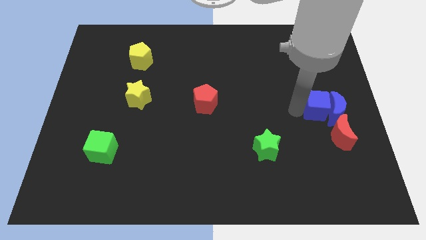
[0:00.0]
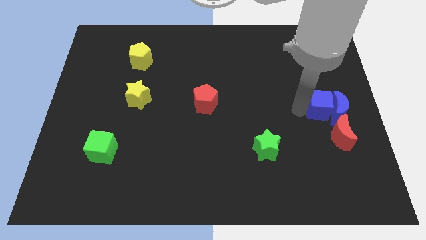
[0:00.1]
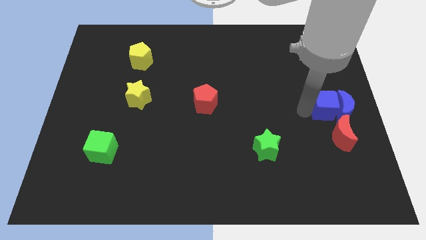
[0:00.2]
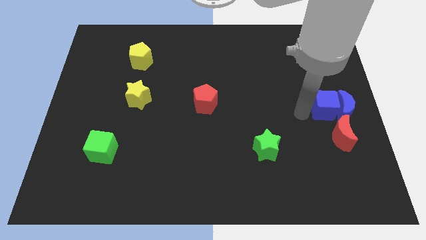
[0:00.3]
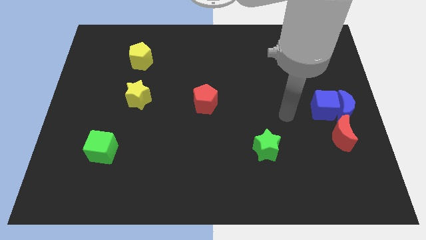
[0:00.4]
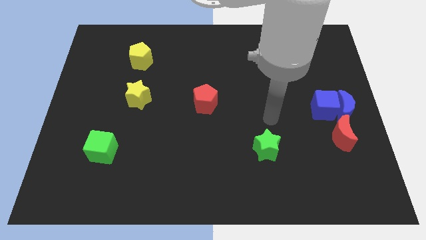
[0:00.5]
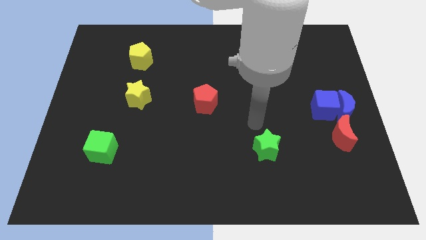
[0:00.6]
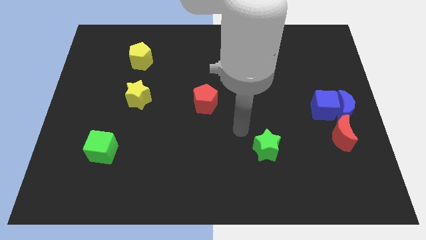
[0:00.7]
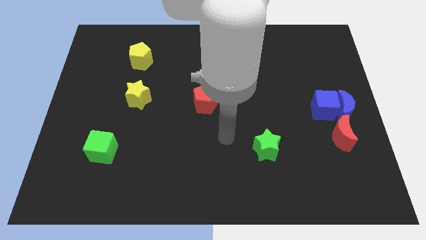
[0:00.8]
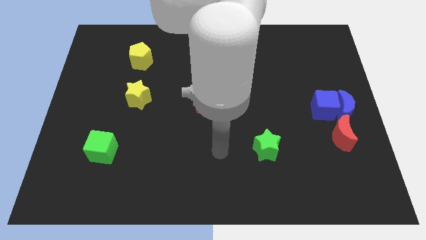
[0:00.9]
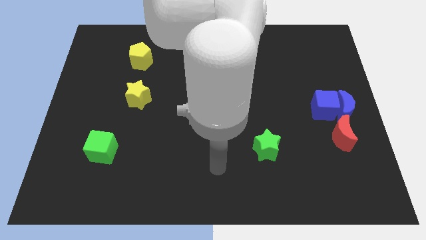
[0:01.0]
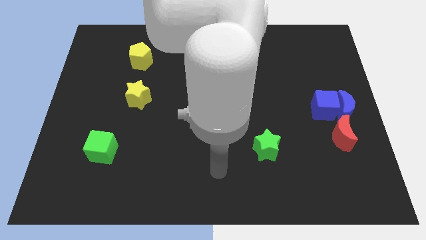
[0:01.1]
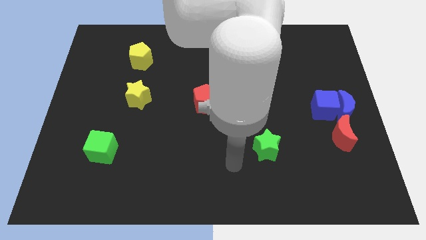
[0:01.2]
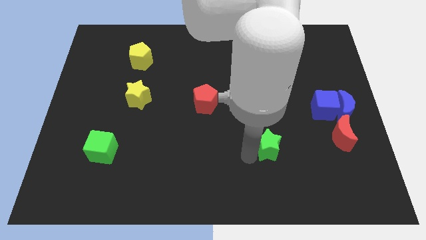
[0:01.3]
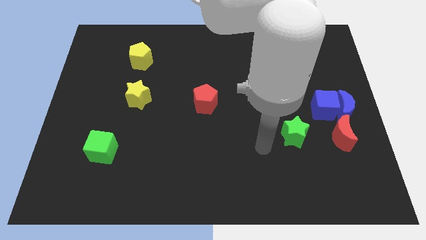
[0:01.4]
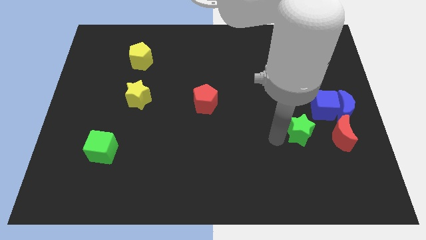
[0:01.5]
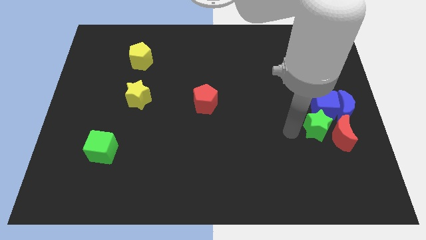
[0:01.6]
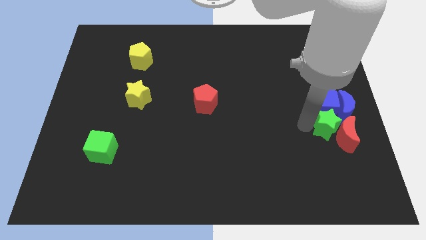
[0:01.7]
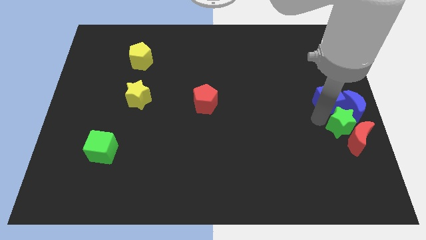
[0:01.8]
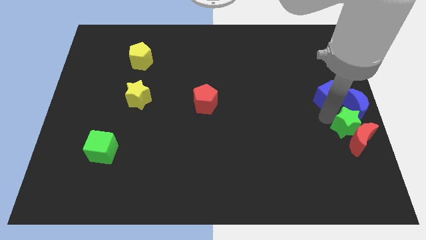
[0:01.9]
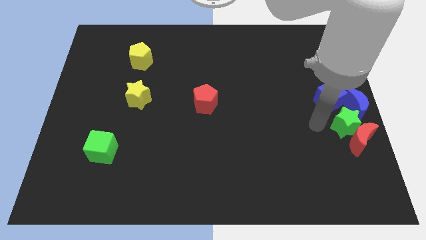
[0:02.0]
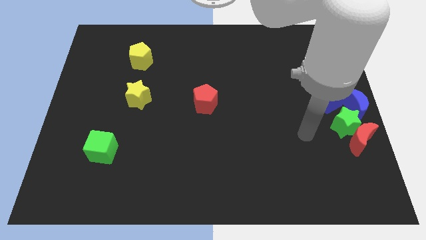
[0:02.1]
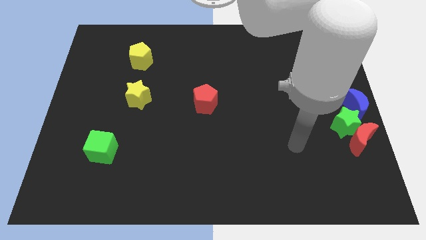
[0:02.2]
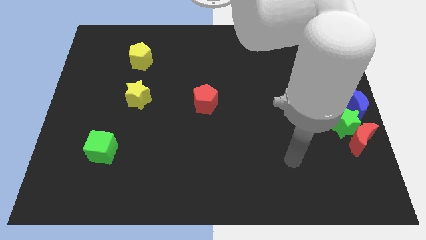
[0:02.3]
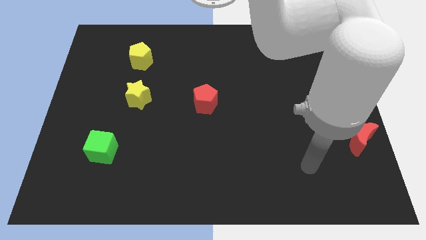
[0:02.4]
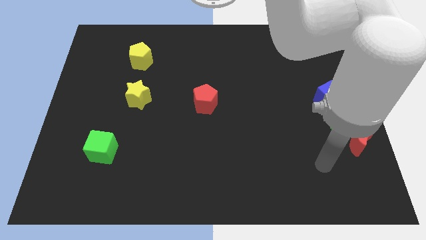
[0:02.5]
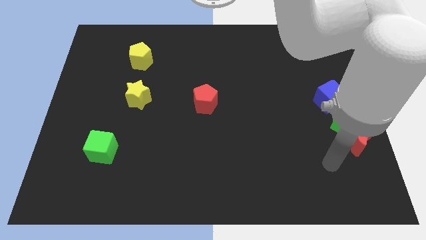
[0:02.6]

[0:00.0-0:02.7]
place green star to the bottom of the blue moon

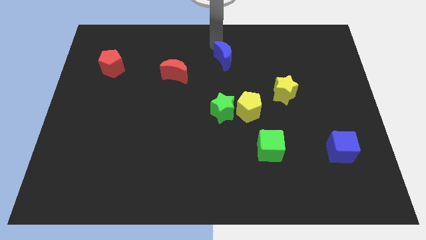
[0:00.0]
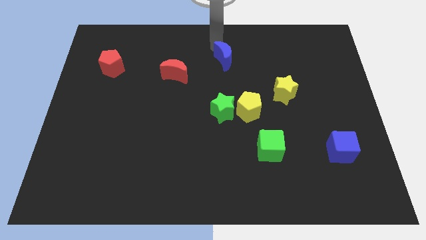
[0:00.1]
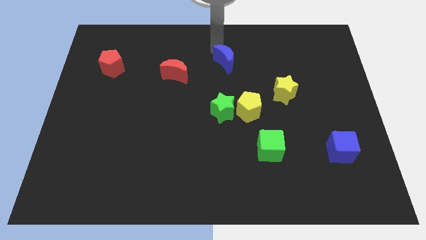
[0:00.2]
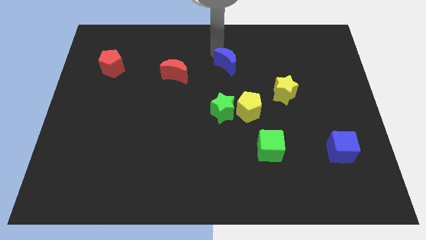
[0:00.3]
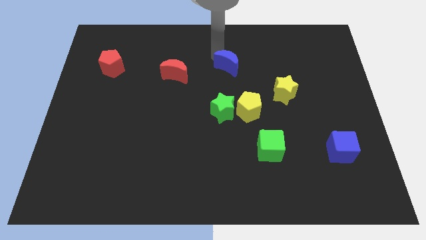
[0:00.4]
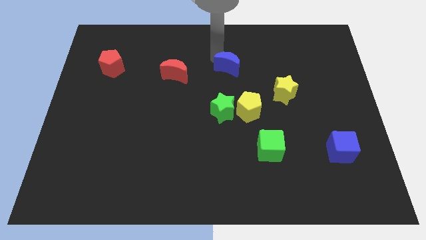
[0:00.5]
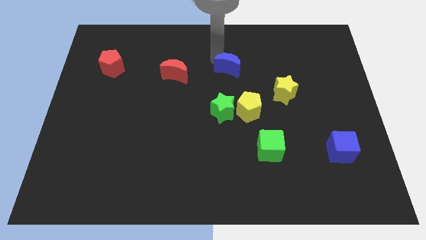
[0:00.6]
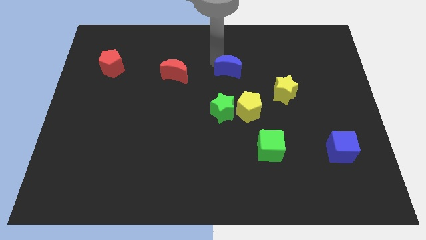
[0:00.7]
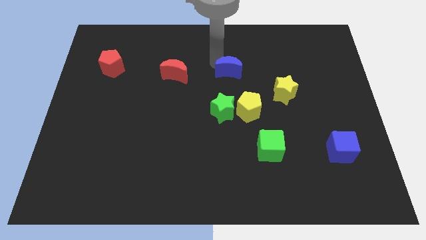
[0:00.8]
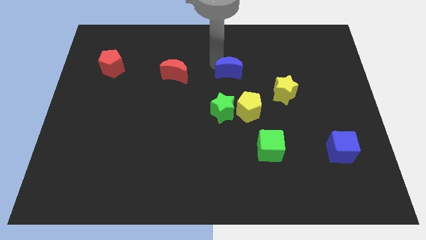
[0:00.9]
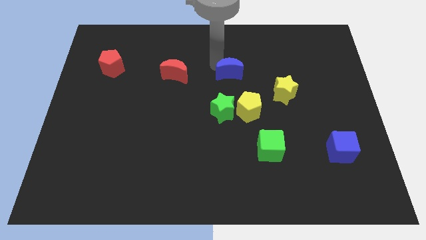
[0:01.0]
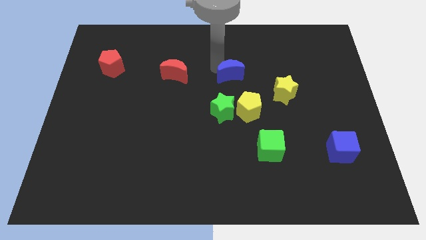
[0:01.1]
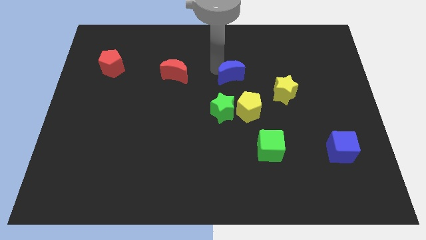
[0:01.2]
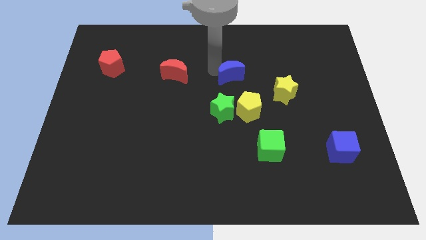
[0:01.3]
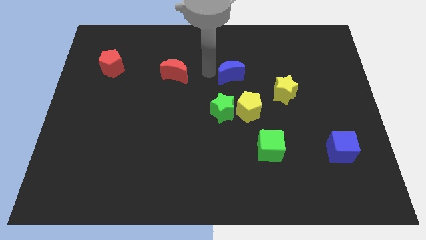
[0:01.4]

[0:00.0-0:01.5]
push the blue crescent to the right of red crescent

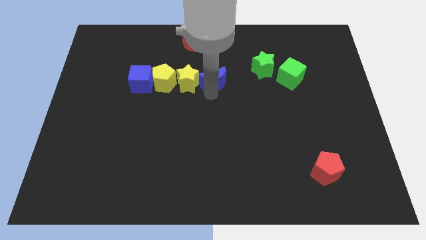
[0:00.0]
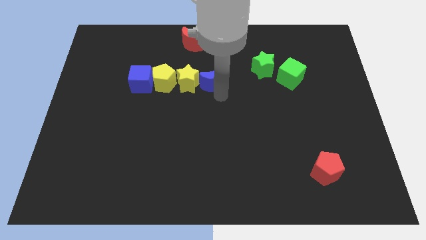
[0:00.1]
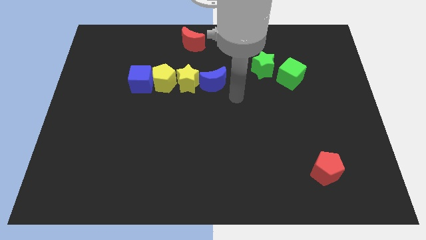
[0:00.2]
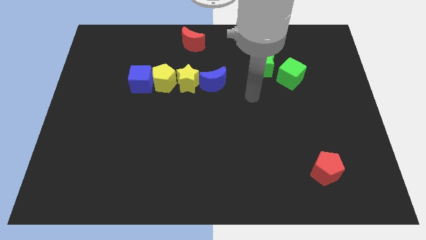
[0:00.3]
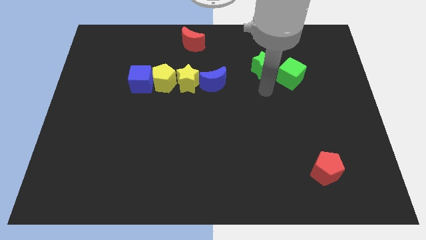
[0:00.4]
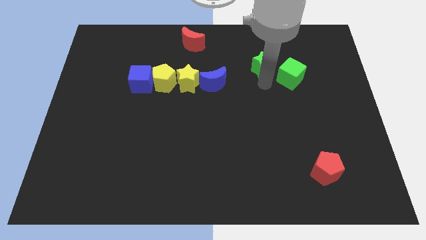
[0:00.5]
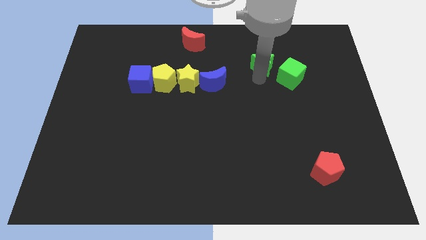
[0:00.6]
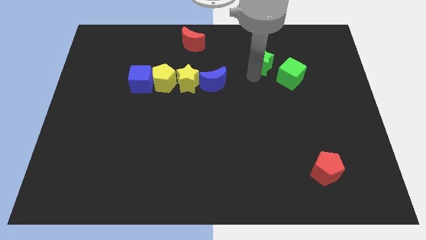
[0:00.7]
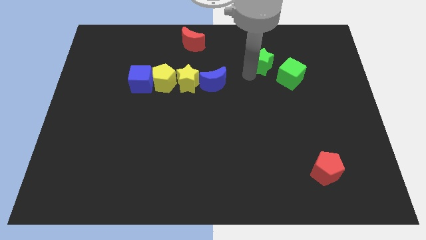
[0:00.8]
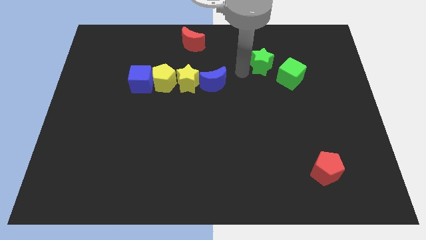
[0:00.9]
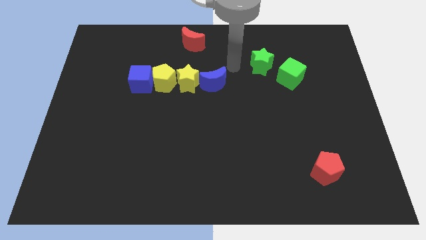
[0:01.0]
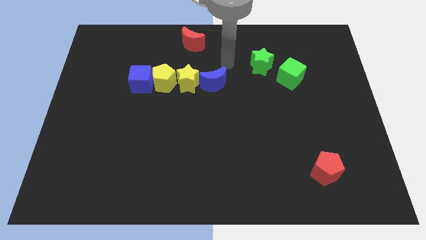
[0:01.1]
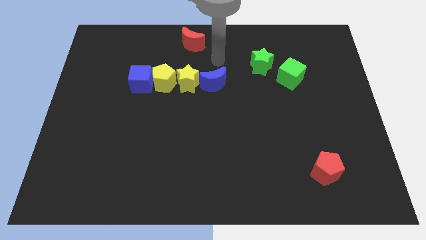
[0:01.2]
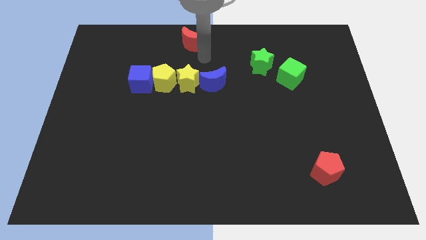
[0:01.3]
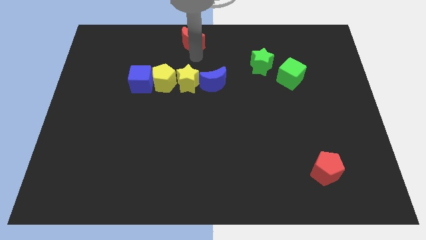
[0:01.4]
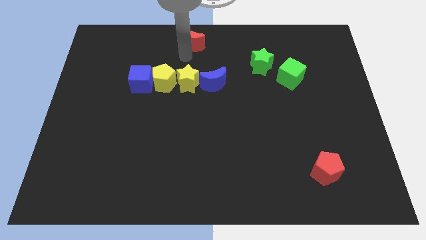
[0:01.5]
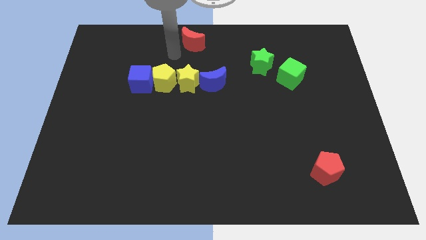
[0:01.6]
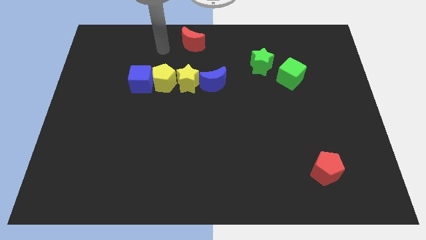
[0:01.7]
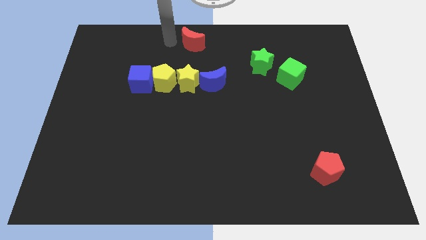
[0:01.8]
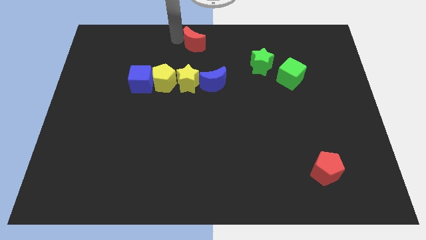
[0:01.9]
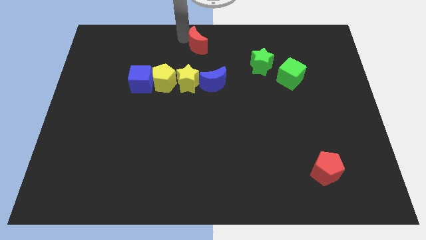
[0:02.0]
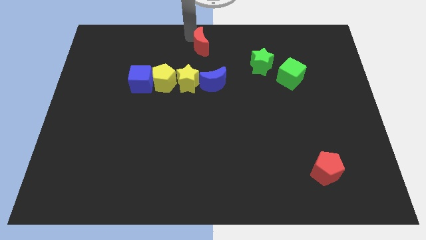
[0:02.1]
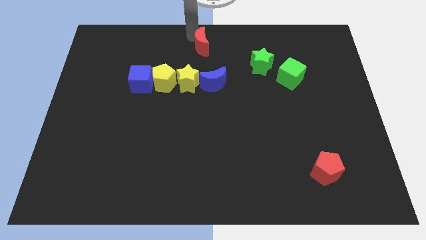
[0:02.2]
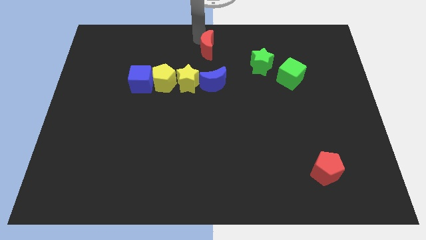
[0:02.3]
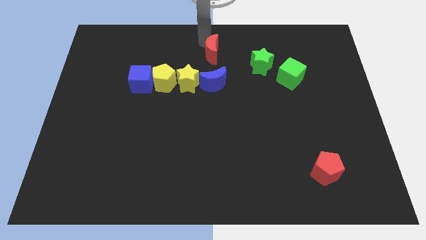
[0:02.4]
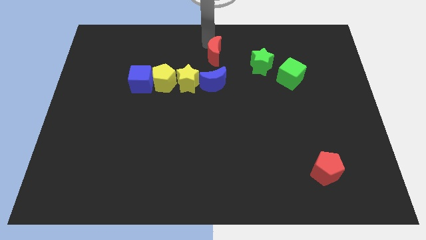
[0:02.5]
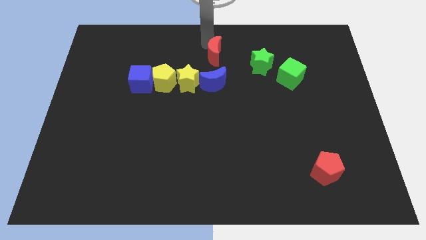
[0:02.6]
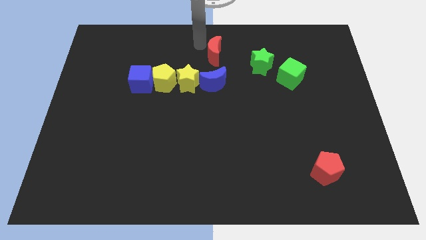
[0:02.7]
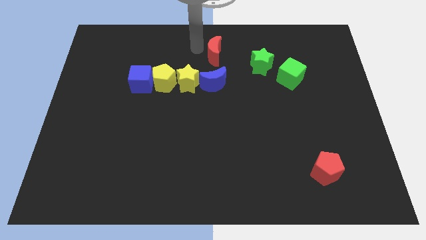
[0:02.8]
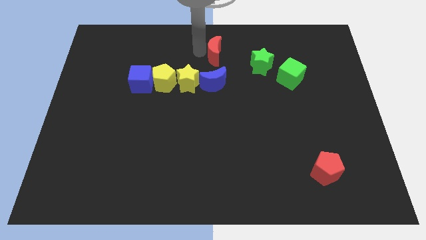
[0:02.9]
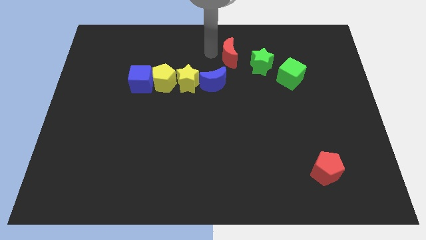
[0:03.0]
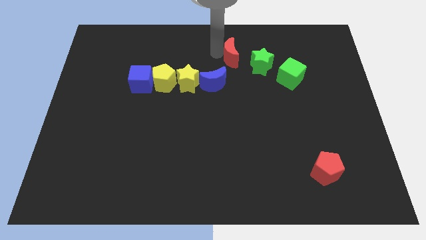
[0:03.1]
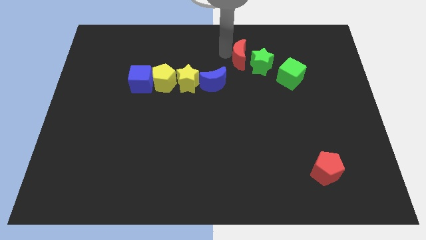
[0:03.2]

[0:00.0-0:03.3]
push the red crescent near to the green star

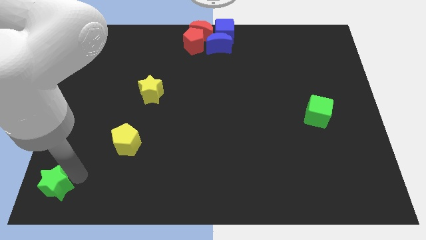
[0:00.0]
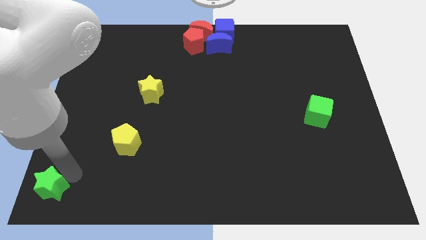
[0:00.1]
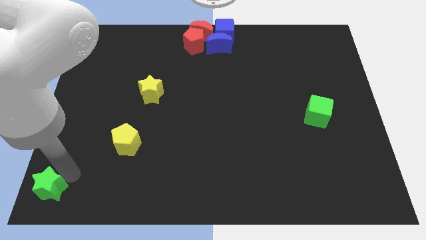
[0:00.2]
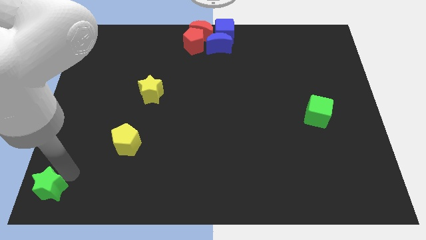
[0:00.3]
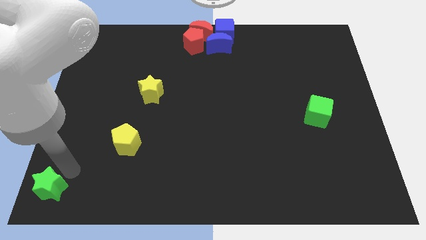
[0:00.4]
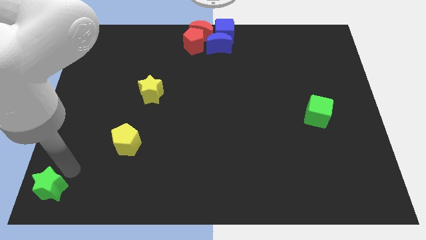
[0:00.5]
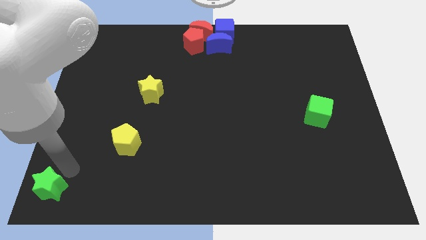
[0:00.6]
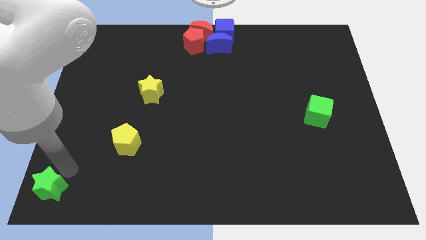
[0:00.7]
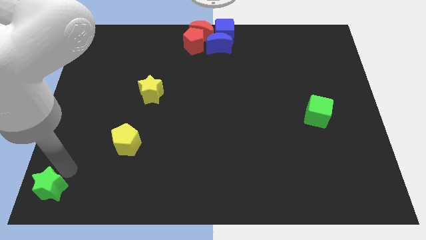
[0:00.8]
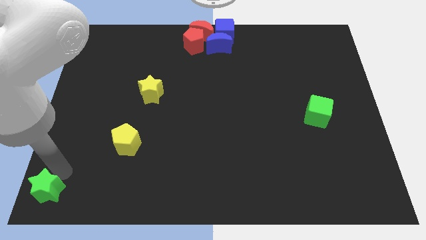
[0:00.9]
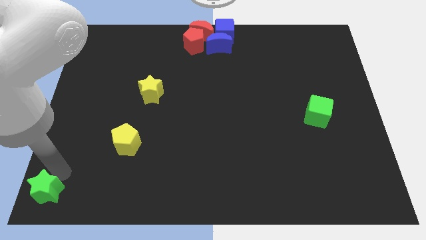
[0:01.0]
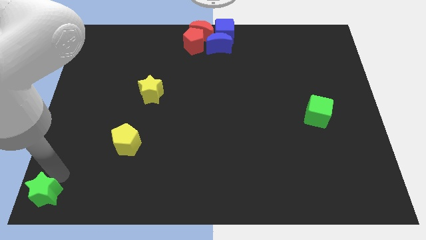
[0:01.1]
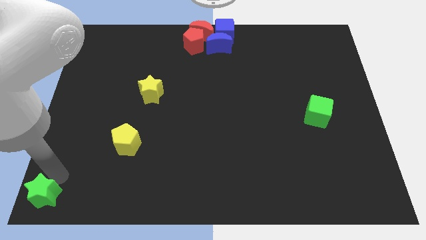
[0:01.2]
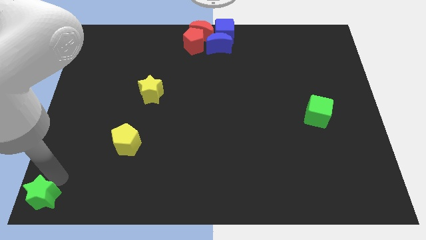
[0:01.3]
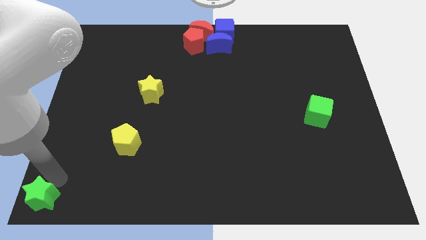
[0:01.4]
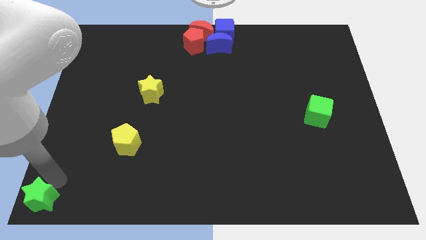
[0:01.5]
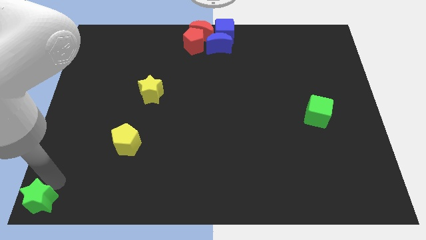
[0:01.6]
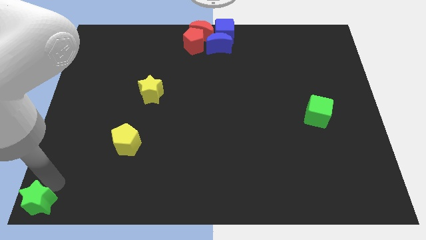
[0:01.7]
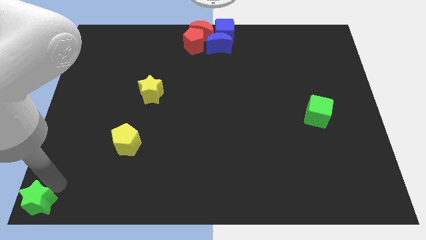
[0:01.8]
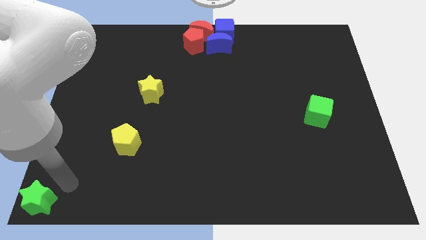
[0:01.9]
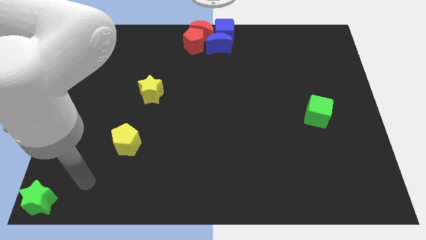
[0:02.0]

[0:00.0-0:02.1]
move green star to the bottom left corner of the board
